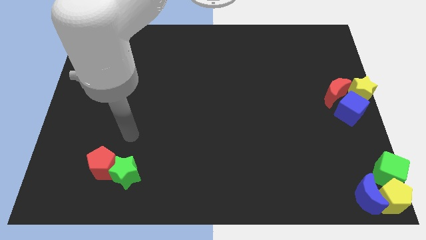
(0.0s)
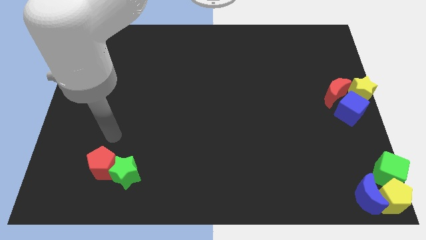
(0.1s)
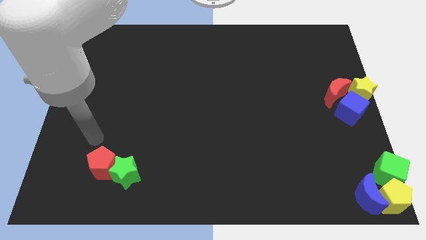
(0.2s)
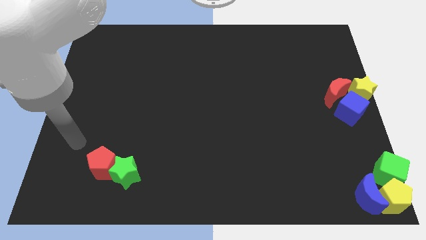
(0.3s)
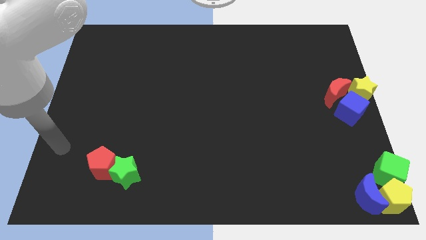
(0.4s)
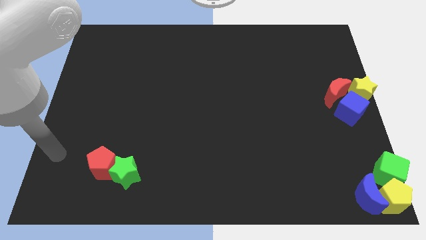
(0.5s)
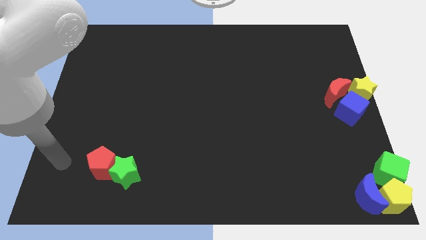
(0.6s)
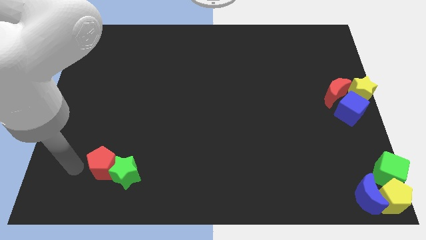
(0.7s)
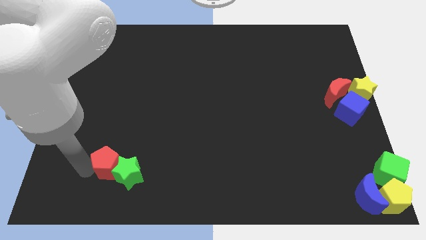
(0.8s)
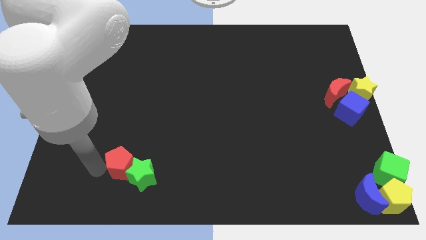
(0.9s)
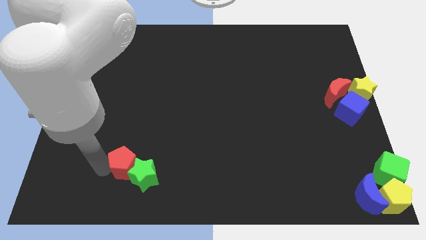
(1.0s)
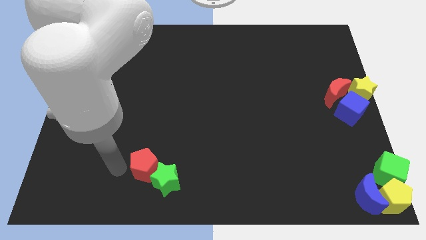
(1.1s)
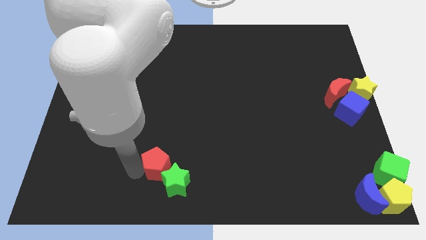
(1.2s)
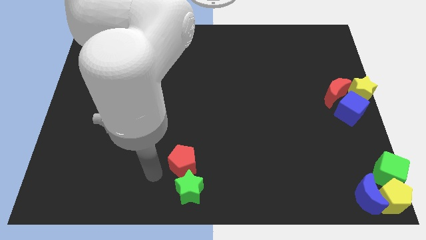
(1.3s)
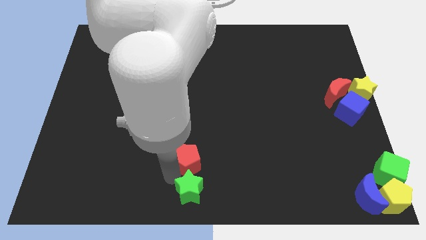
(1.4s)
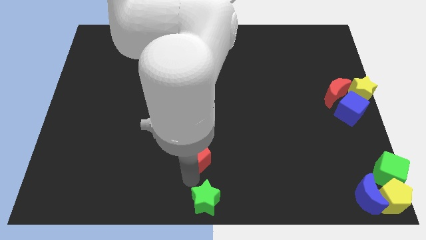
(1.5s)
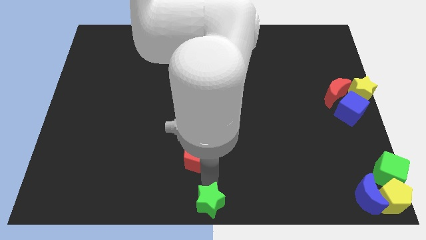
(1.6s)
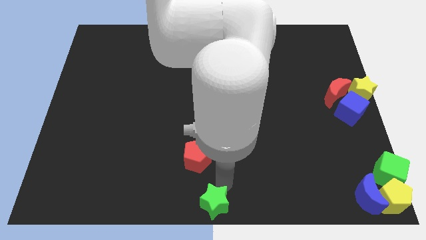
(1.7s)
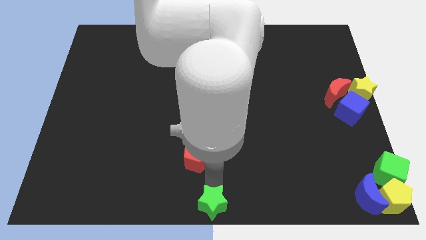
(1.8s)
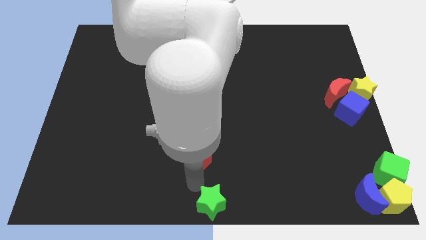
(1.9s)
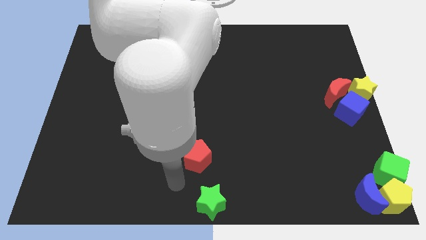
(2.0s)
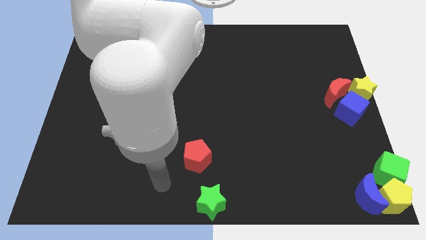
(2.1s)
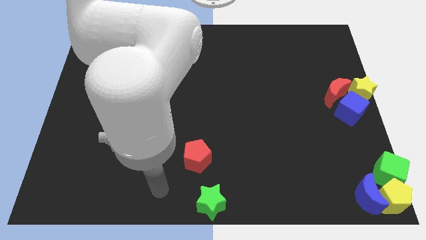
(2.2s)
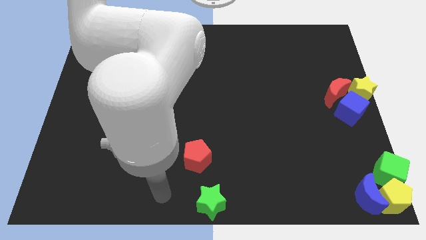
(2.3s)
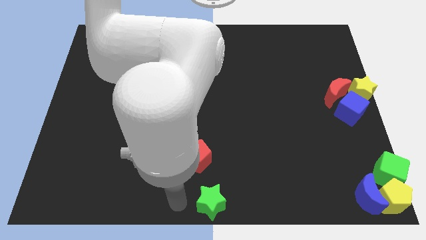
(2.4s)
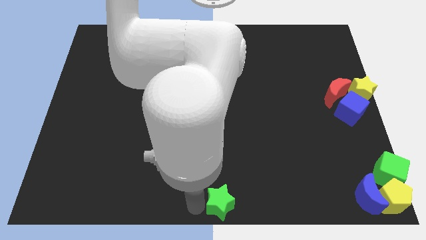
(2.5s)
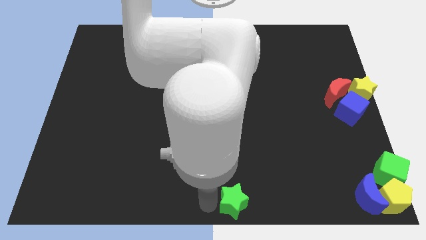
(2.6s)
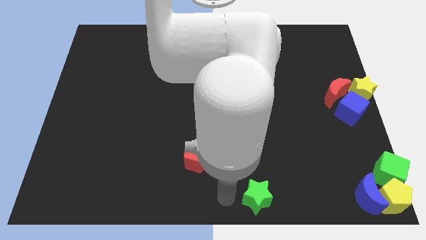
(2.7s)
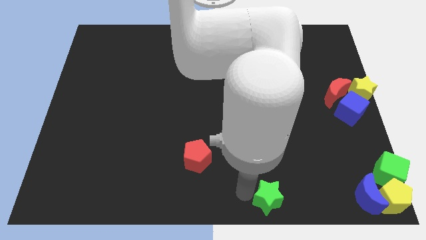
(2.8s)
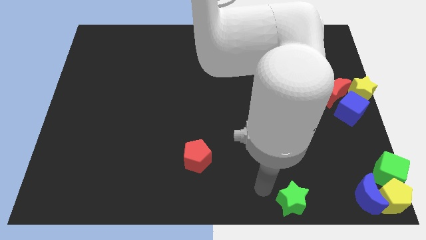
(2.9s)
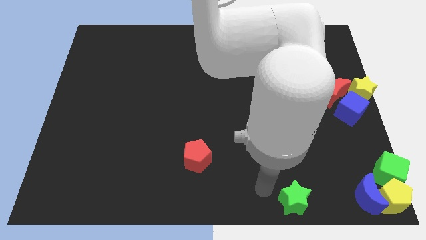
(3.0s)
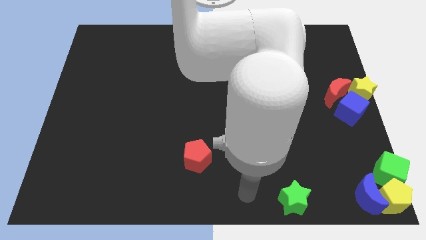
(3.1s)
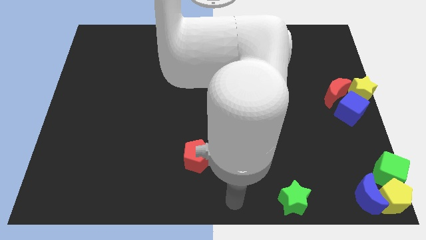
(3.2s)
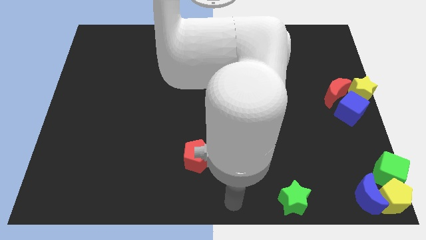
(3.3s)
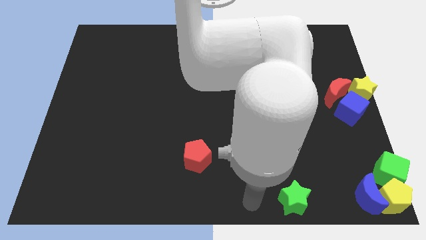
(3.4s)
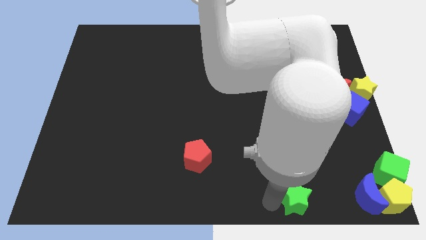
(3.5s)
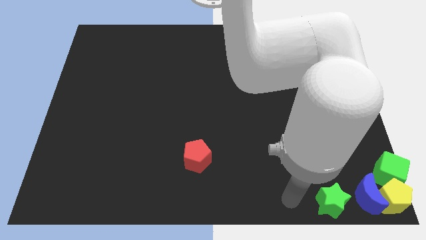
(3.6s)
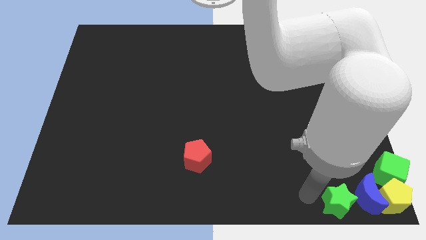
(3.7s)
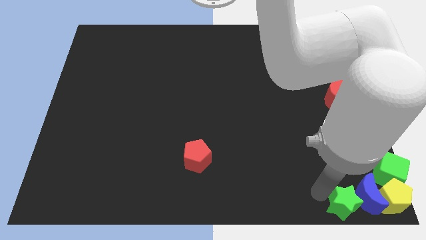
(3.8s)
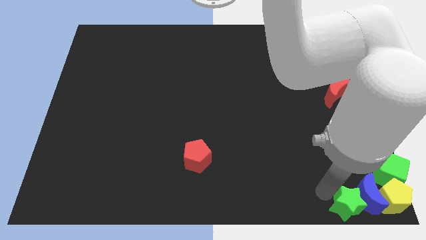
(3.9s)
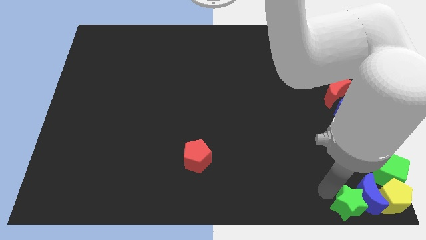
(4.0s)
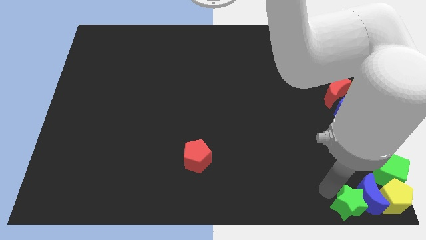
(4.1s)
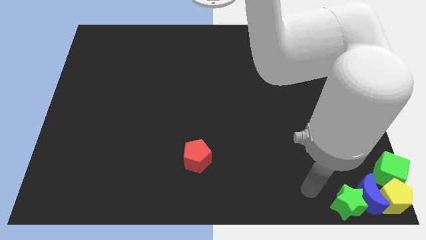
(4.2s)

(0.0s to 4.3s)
move the green star into the group of blocks

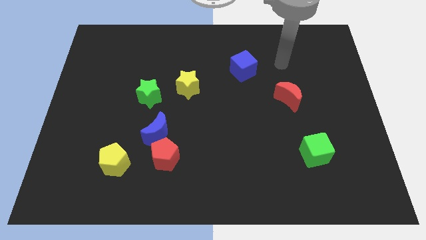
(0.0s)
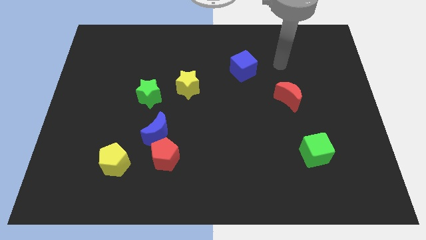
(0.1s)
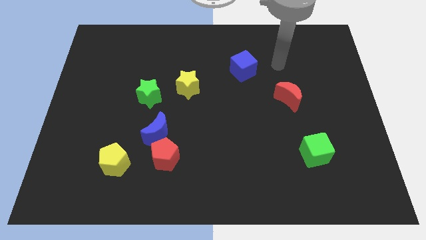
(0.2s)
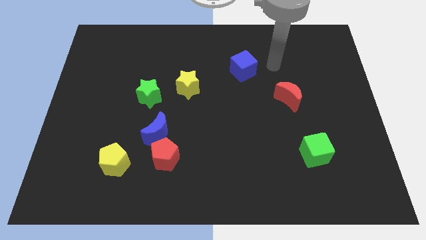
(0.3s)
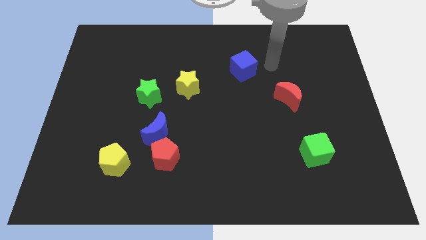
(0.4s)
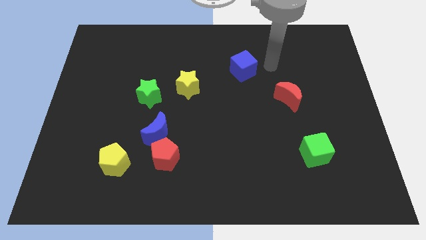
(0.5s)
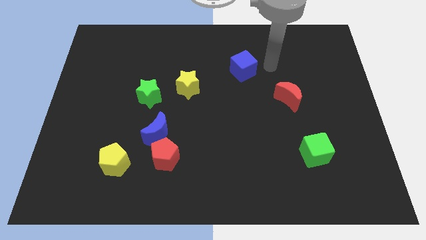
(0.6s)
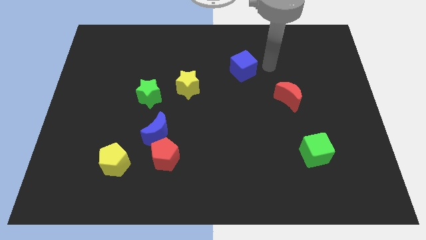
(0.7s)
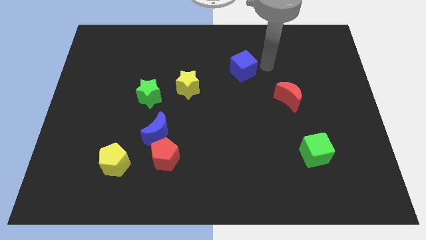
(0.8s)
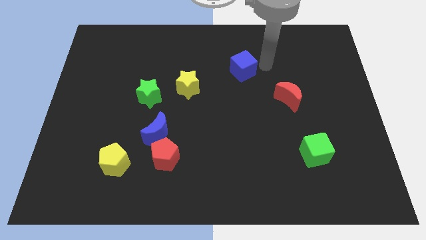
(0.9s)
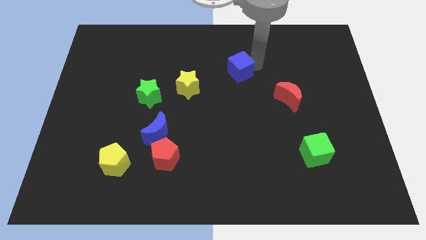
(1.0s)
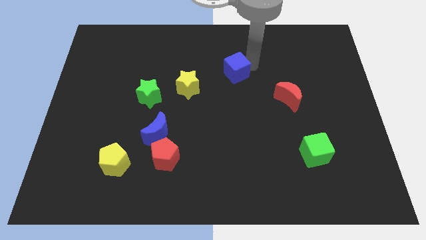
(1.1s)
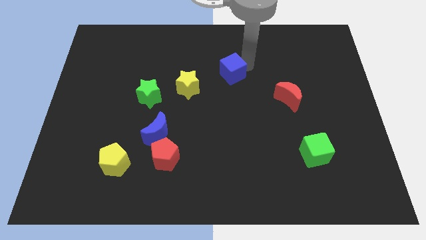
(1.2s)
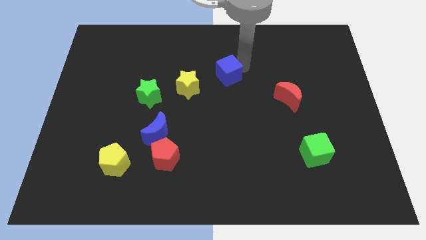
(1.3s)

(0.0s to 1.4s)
touch the blue cube

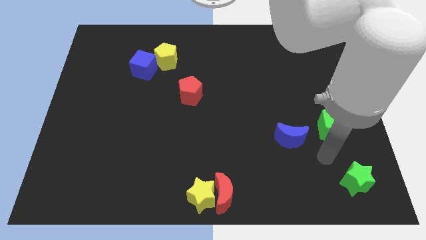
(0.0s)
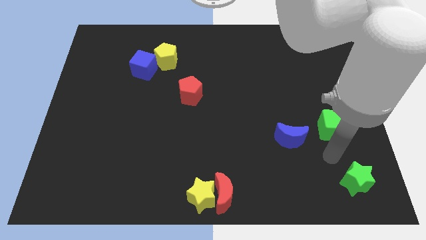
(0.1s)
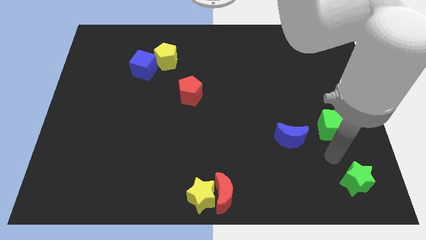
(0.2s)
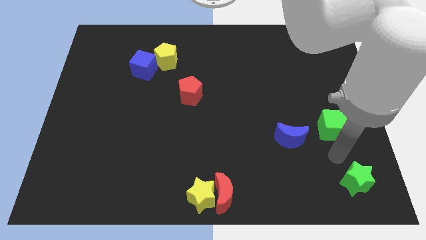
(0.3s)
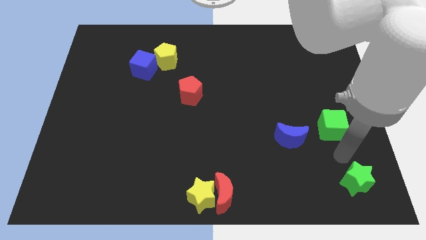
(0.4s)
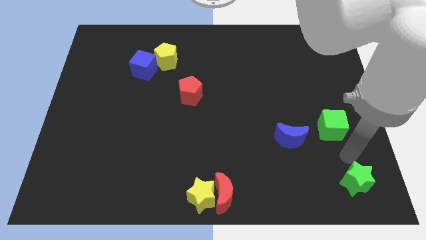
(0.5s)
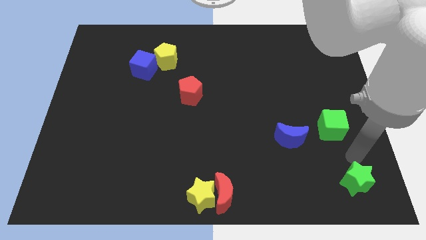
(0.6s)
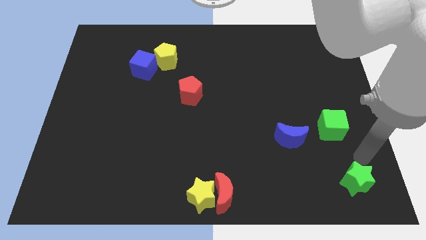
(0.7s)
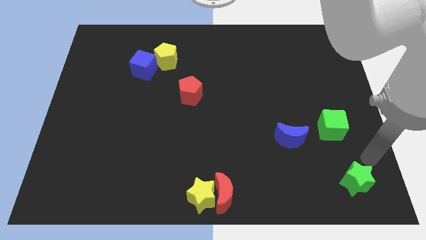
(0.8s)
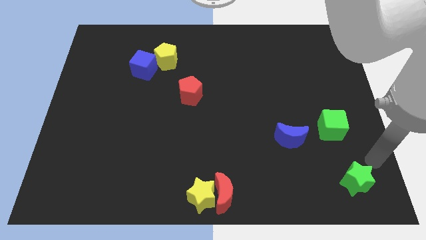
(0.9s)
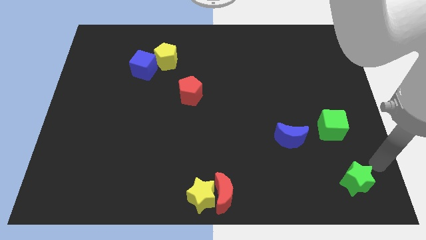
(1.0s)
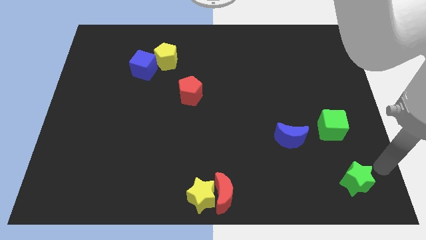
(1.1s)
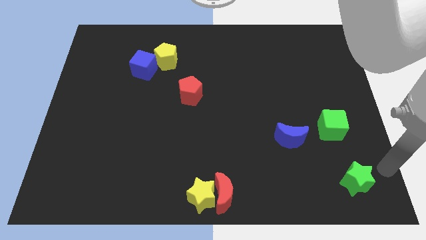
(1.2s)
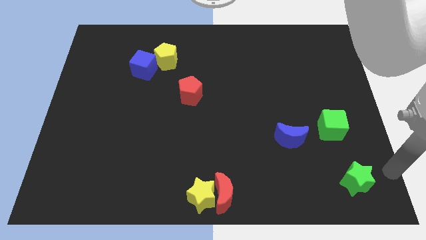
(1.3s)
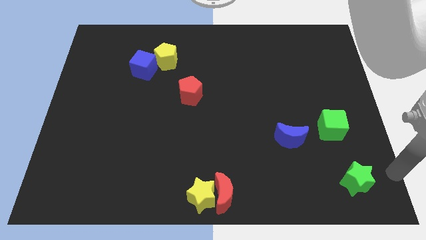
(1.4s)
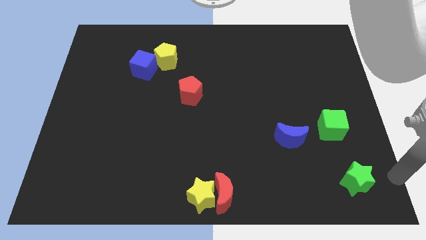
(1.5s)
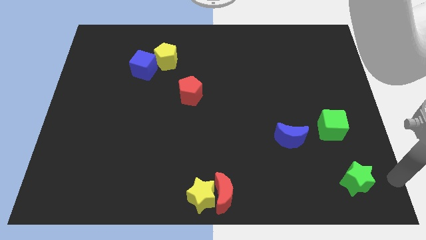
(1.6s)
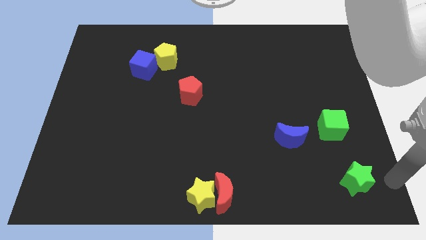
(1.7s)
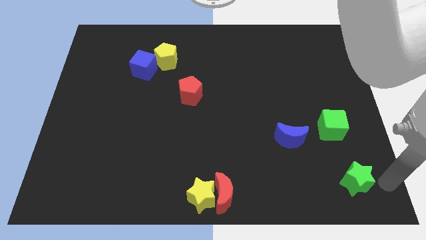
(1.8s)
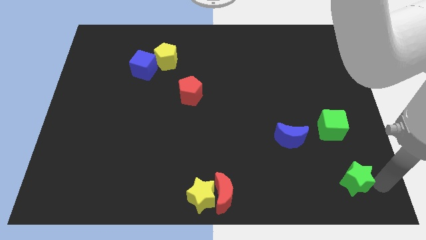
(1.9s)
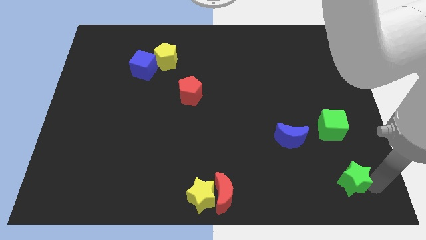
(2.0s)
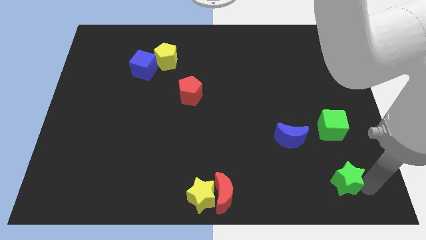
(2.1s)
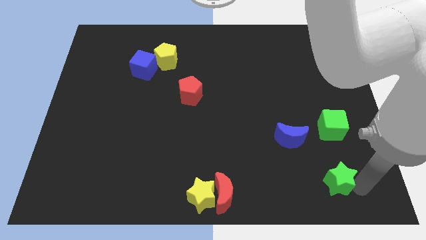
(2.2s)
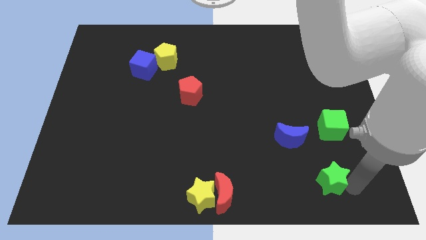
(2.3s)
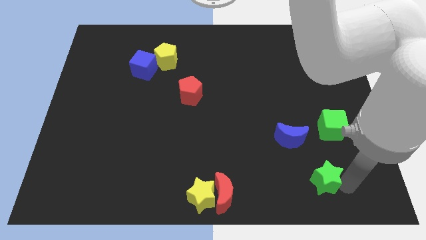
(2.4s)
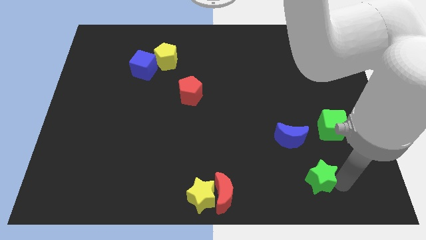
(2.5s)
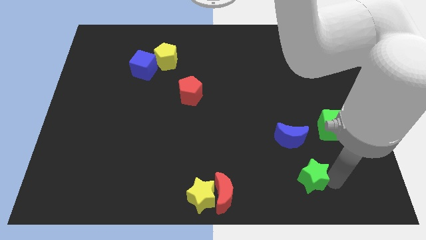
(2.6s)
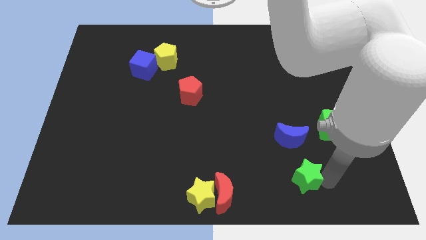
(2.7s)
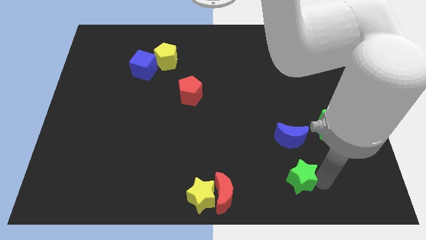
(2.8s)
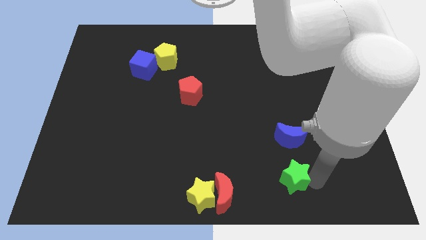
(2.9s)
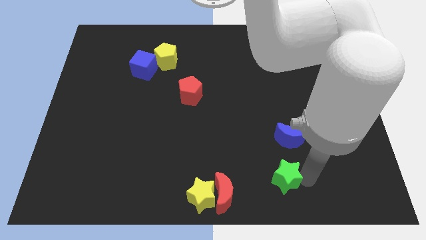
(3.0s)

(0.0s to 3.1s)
place the green star towards the bottom of the blue moon

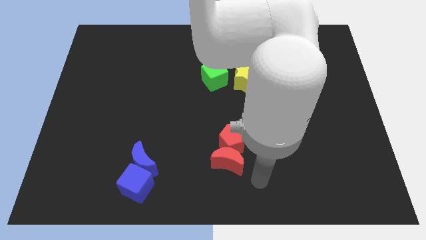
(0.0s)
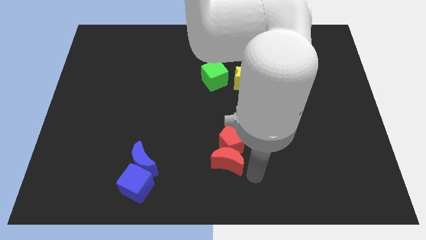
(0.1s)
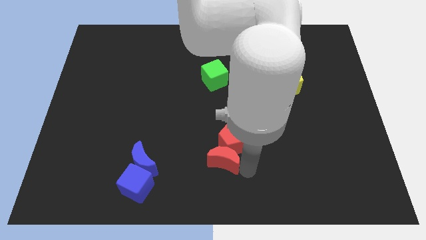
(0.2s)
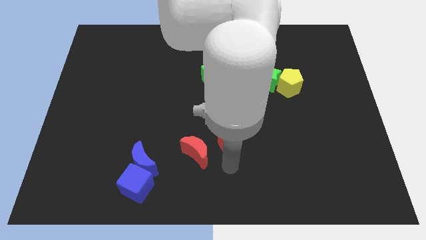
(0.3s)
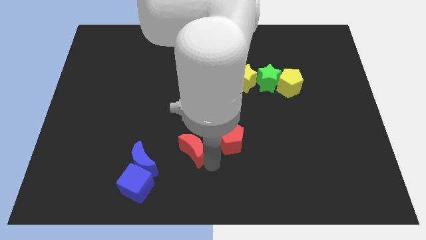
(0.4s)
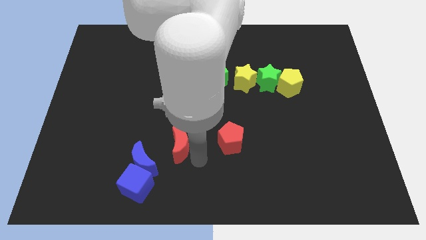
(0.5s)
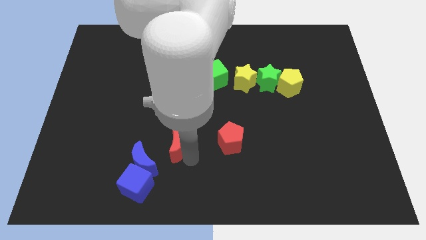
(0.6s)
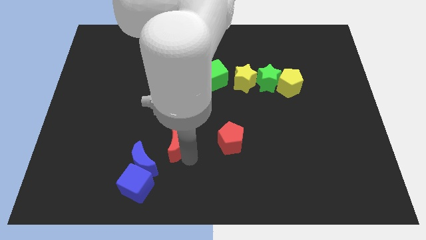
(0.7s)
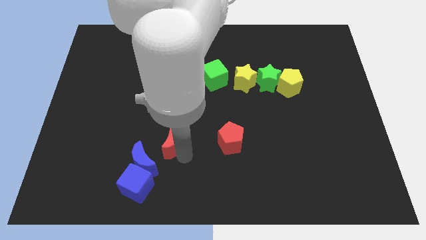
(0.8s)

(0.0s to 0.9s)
separate the group of red blocks
